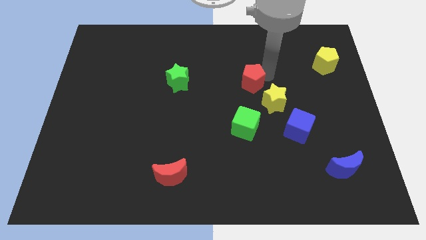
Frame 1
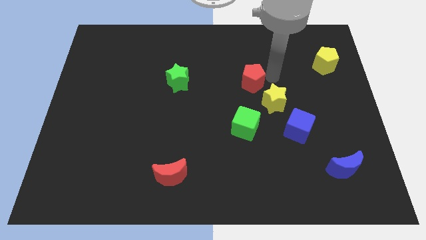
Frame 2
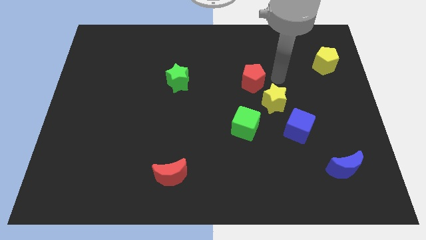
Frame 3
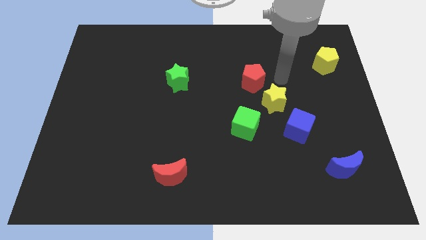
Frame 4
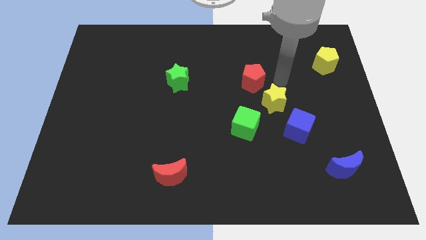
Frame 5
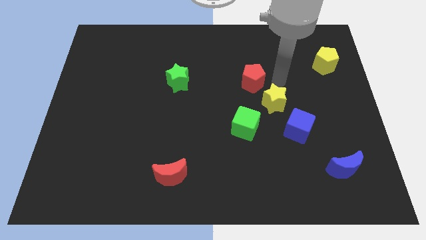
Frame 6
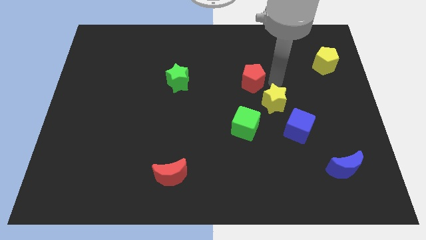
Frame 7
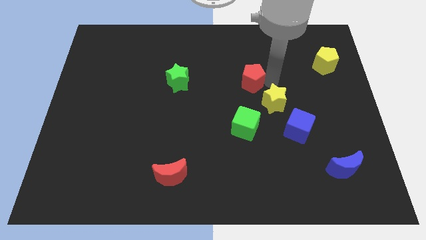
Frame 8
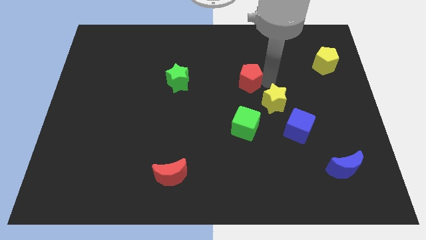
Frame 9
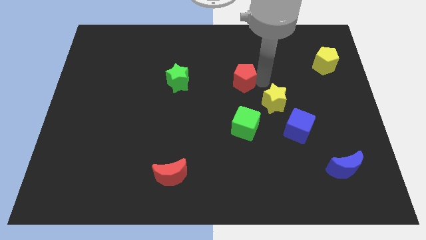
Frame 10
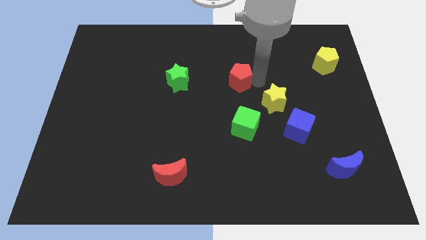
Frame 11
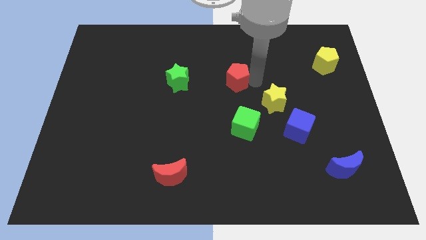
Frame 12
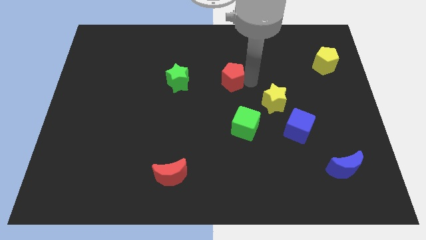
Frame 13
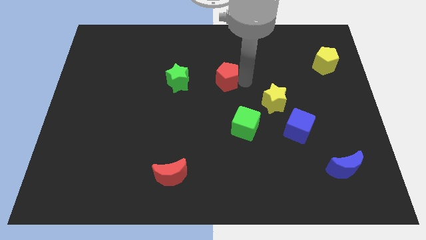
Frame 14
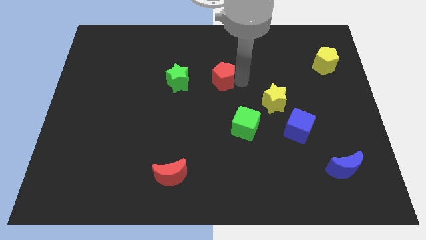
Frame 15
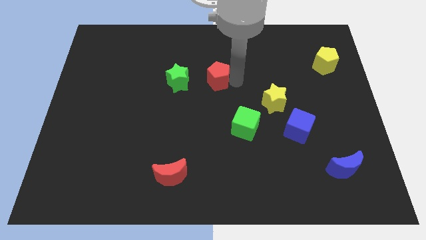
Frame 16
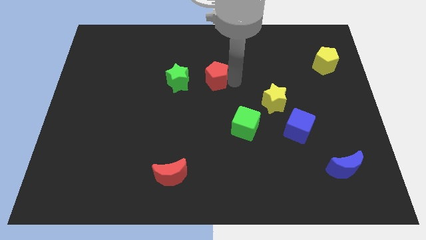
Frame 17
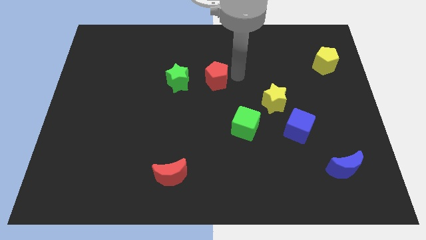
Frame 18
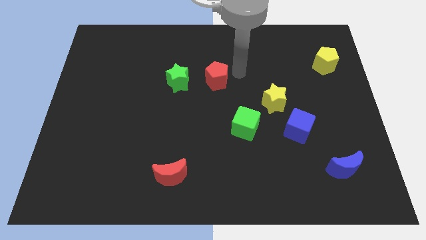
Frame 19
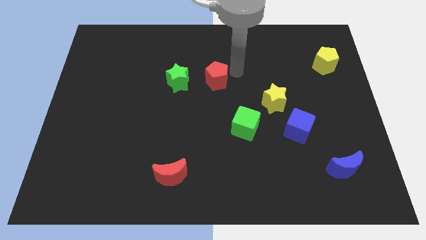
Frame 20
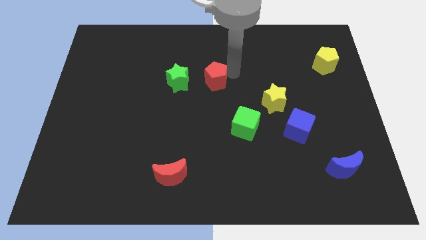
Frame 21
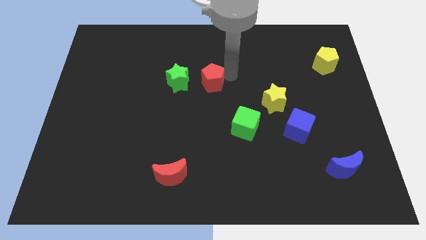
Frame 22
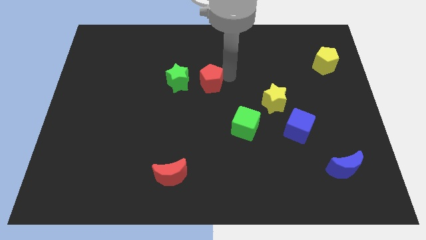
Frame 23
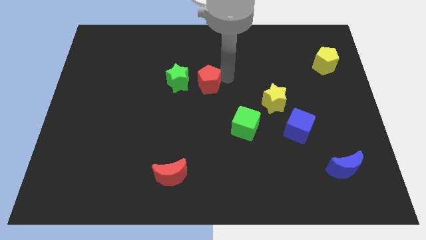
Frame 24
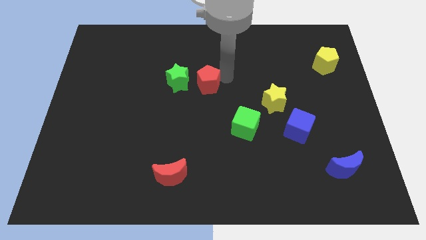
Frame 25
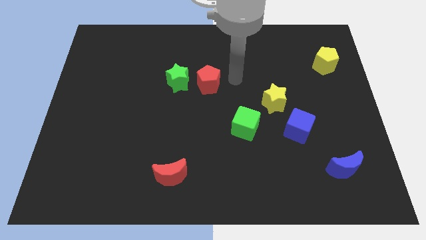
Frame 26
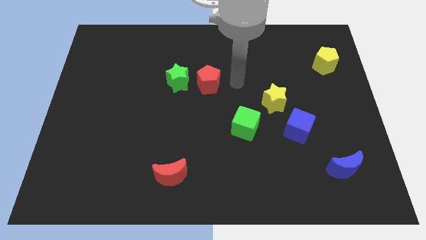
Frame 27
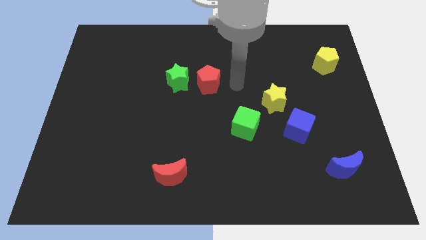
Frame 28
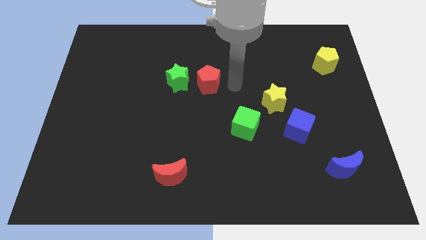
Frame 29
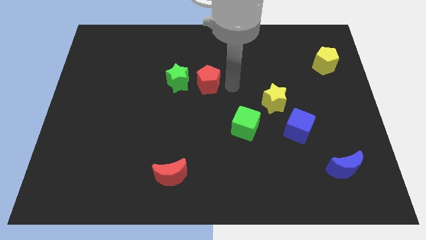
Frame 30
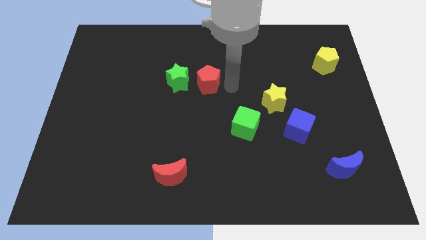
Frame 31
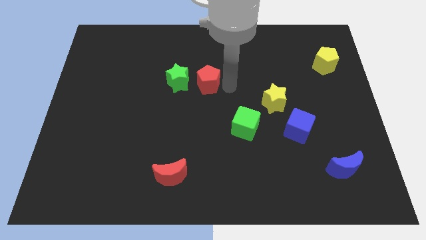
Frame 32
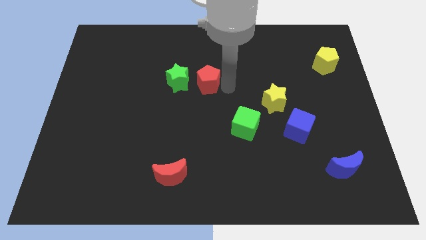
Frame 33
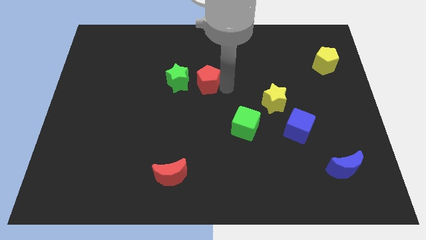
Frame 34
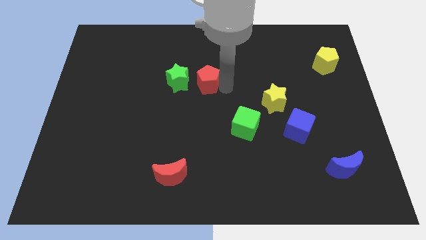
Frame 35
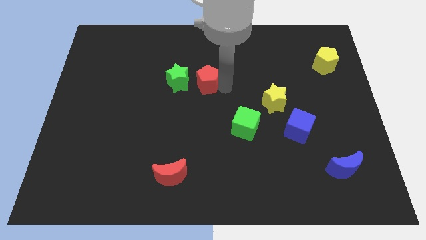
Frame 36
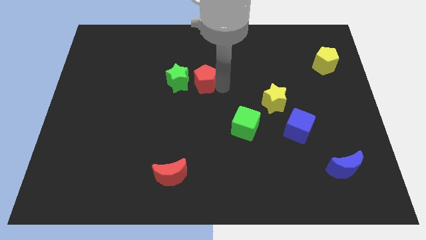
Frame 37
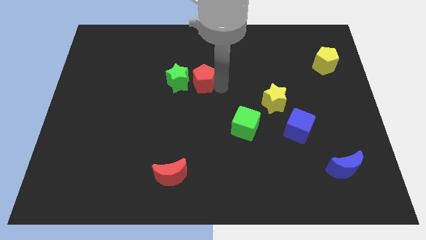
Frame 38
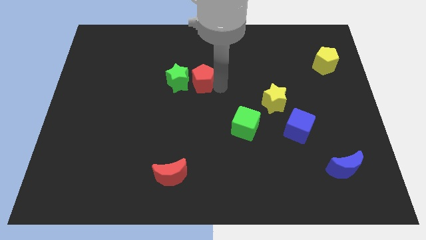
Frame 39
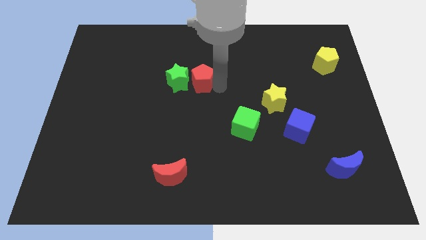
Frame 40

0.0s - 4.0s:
place red pentagon beside green star

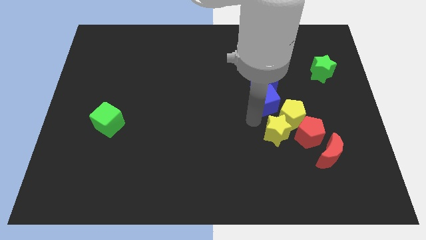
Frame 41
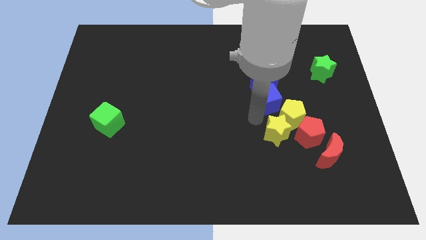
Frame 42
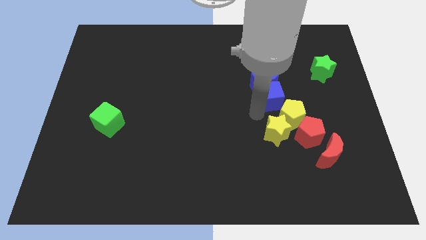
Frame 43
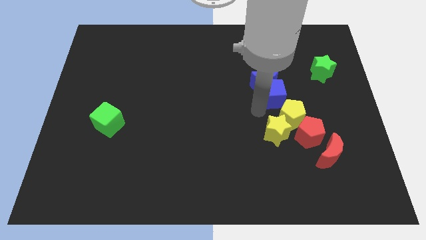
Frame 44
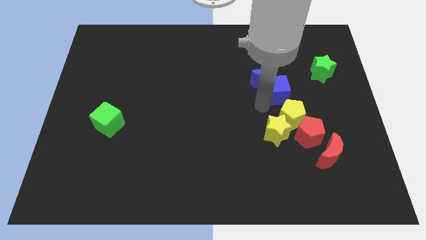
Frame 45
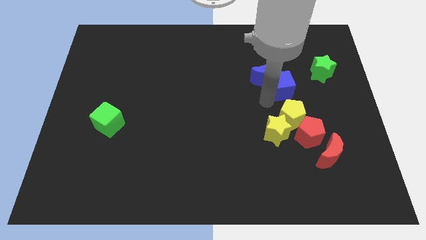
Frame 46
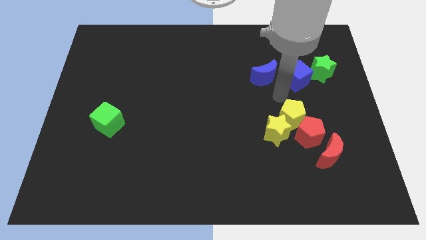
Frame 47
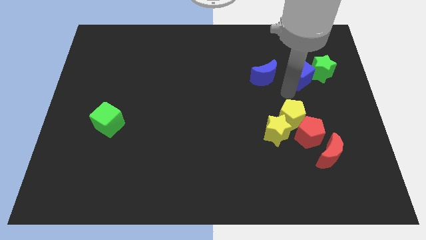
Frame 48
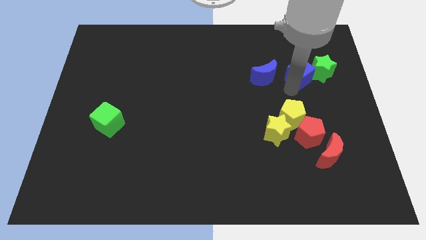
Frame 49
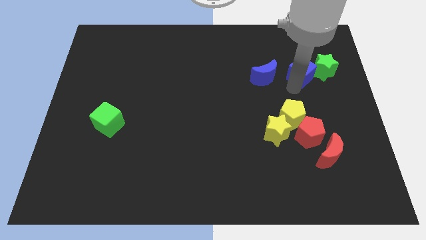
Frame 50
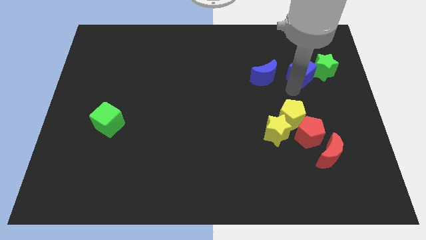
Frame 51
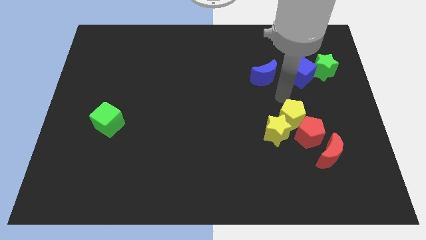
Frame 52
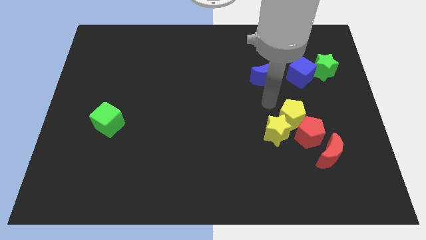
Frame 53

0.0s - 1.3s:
push blue cube in to green star

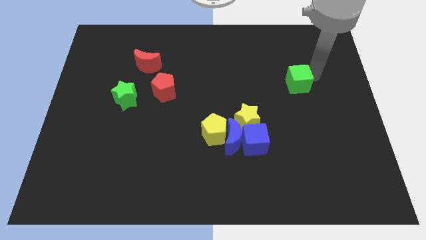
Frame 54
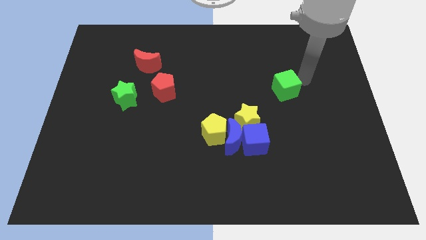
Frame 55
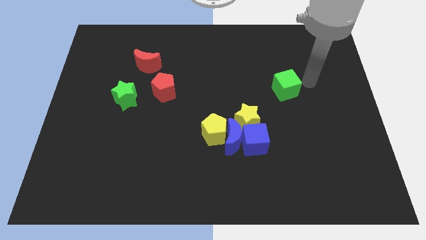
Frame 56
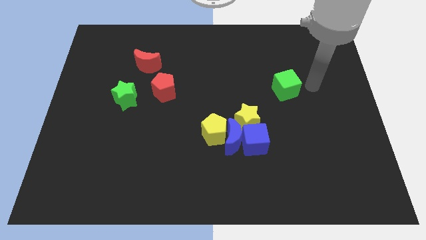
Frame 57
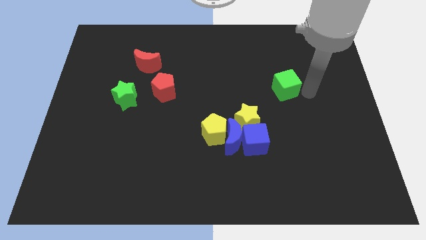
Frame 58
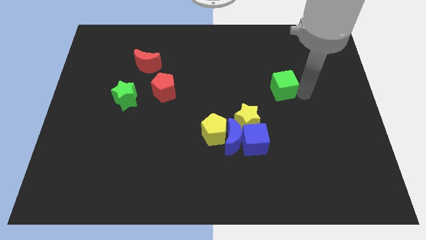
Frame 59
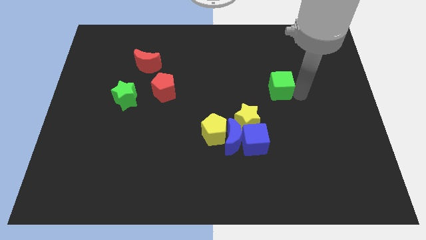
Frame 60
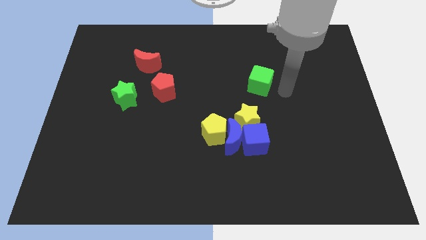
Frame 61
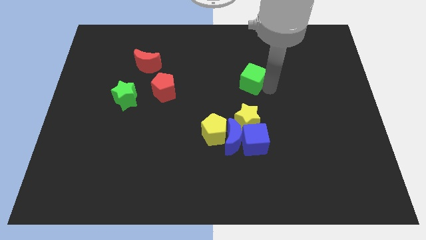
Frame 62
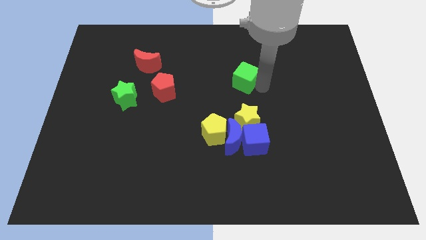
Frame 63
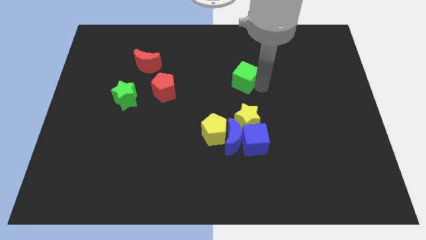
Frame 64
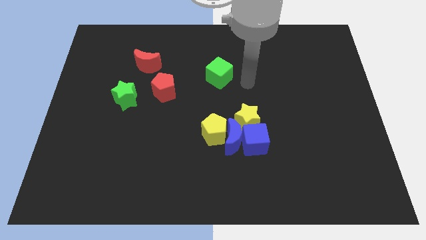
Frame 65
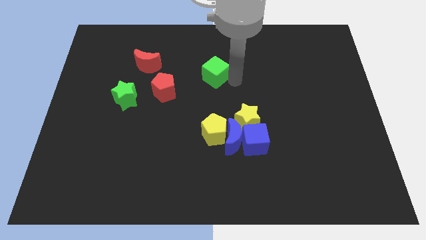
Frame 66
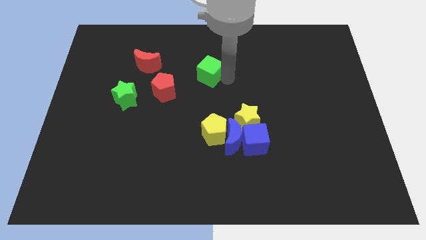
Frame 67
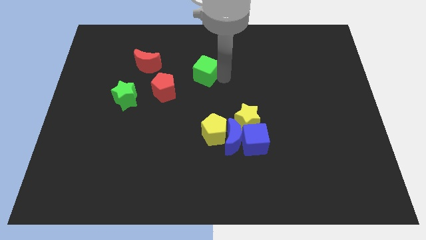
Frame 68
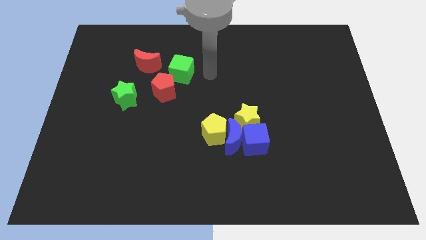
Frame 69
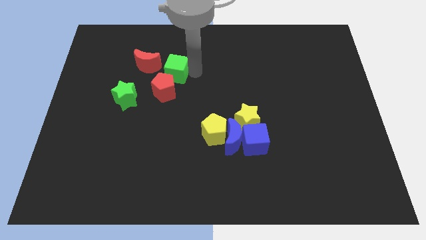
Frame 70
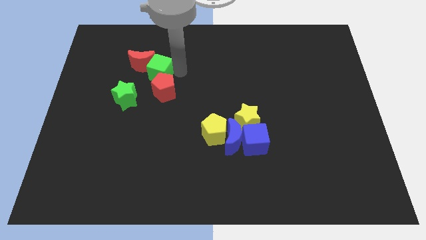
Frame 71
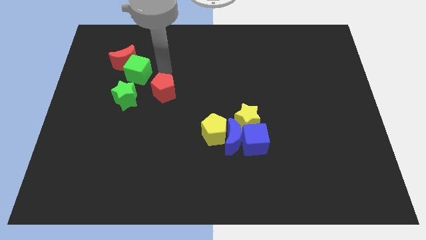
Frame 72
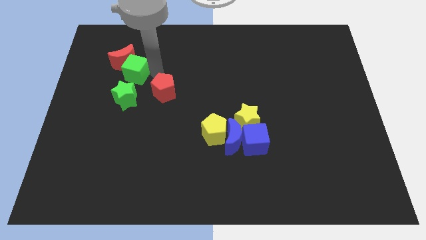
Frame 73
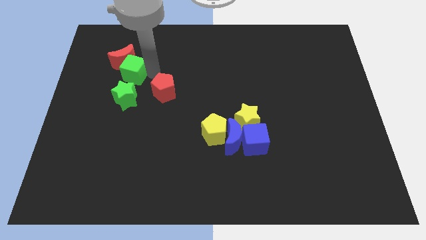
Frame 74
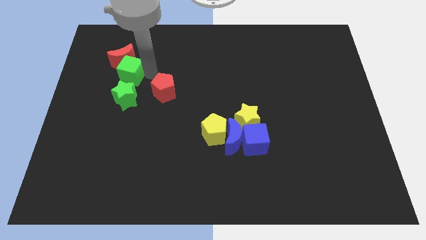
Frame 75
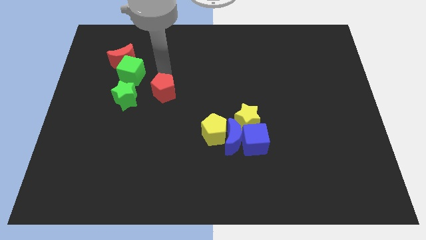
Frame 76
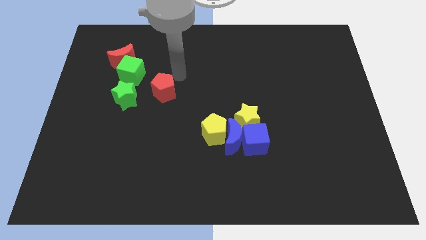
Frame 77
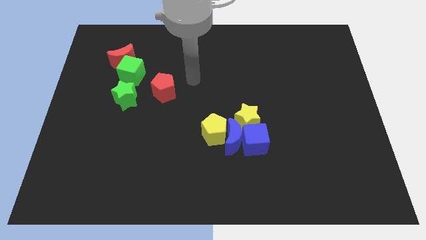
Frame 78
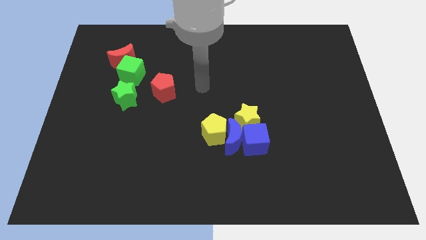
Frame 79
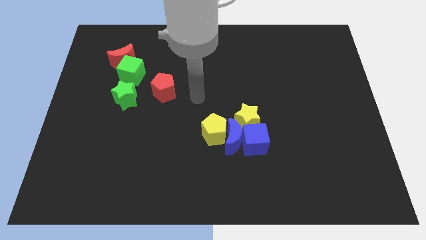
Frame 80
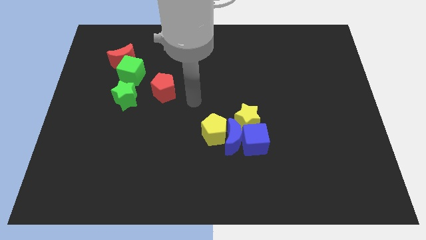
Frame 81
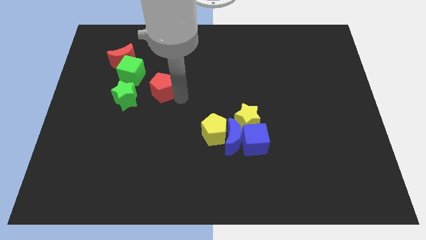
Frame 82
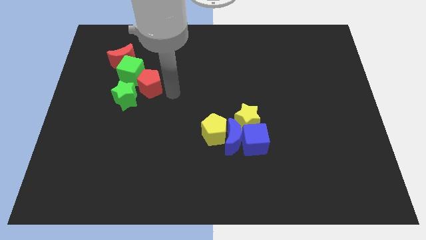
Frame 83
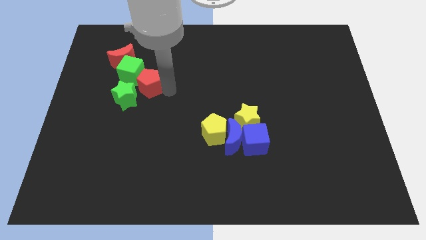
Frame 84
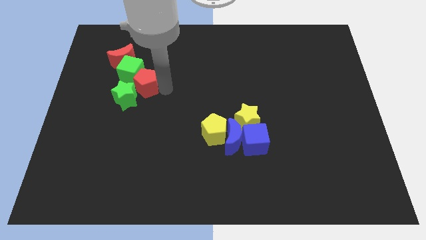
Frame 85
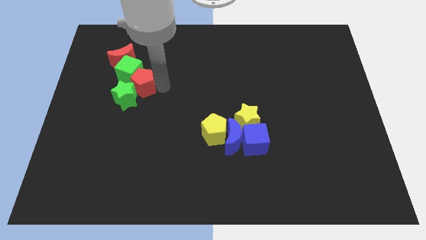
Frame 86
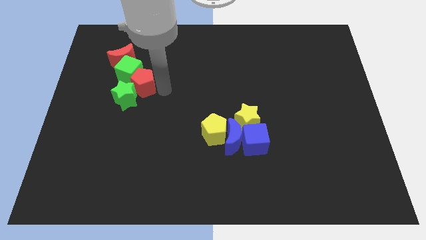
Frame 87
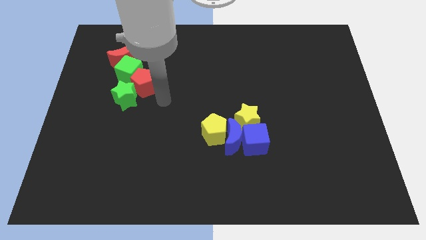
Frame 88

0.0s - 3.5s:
move the red pentagon into the green blocks

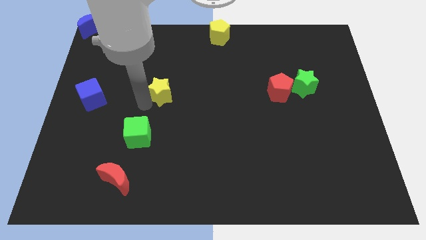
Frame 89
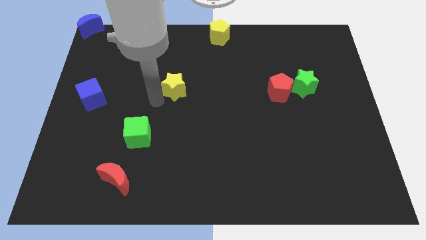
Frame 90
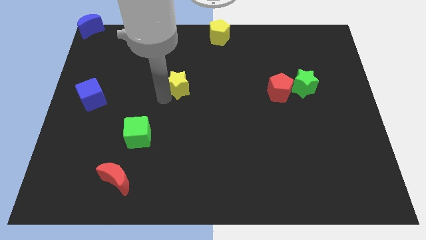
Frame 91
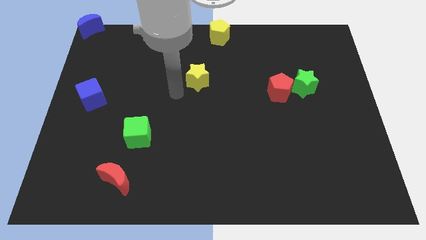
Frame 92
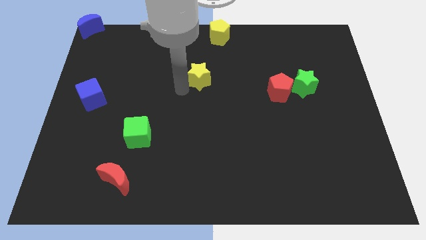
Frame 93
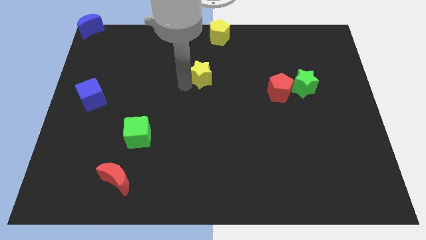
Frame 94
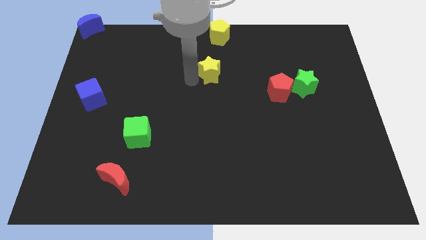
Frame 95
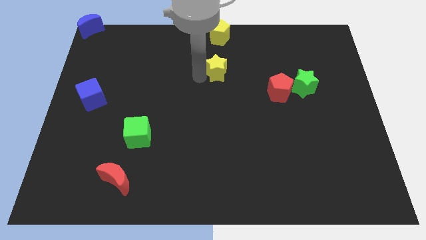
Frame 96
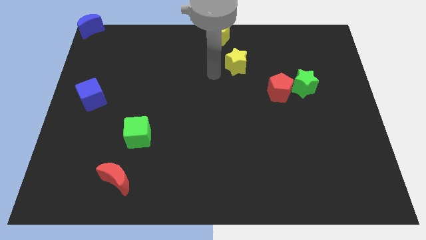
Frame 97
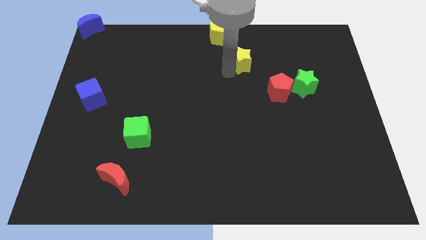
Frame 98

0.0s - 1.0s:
put the yellow star between the red pentagon and yellow pentagon
